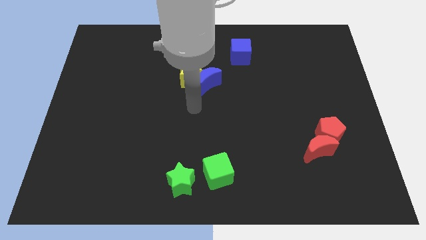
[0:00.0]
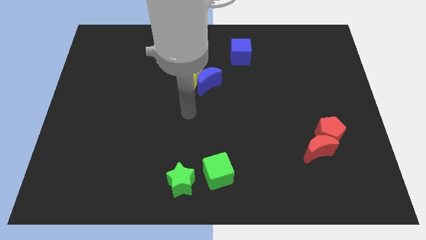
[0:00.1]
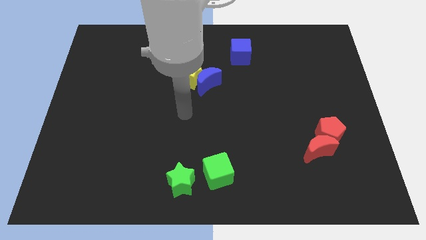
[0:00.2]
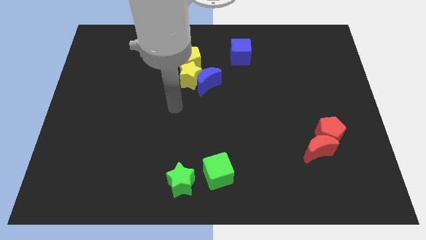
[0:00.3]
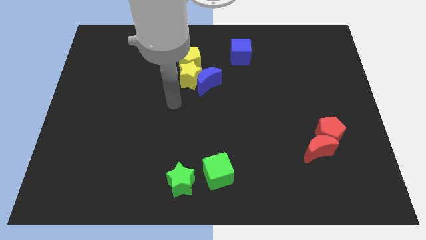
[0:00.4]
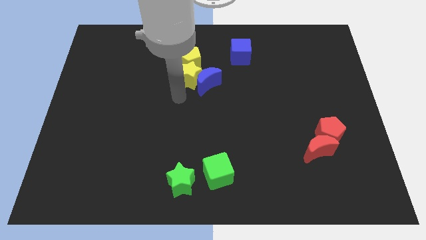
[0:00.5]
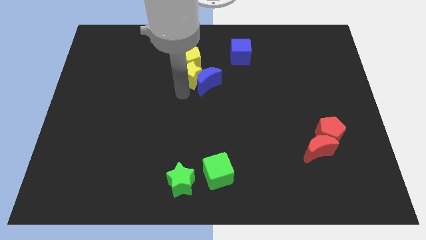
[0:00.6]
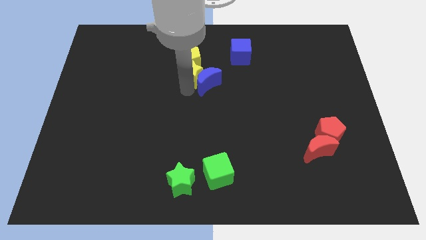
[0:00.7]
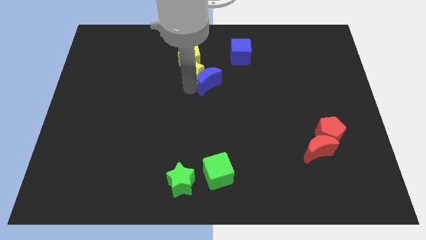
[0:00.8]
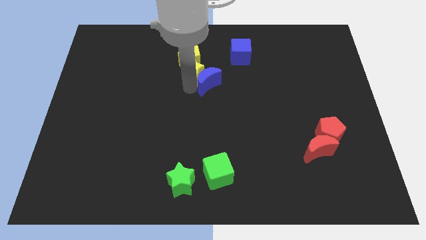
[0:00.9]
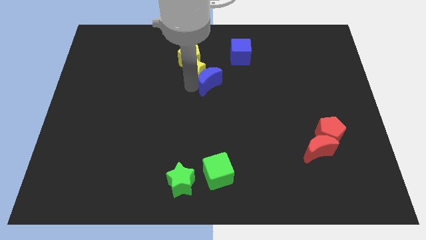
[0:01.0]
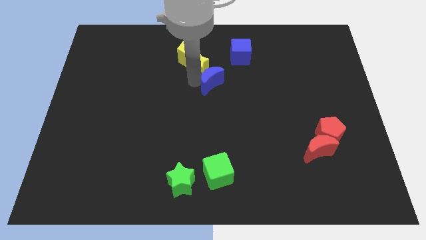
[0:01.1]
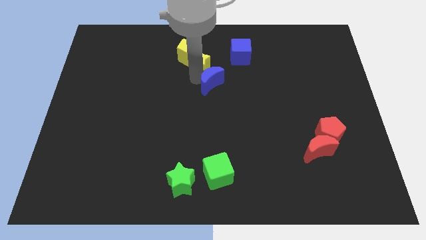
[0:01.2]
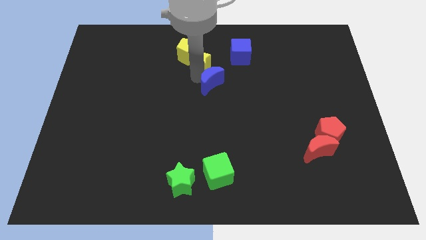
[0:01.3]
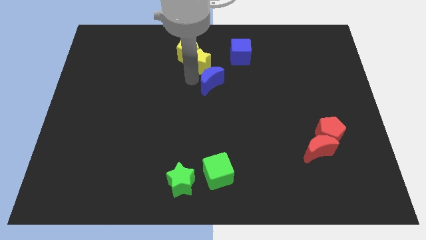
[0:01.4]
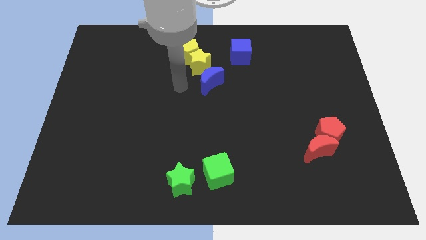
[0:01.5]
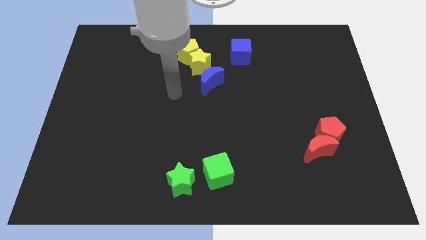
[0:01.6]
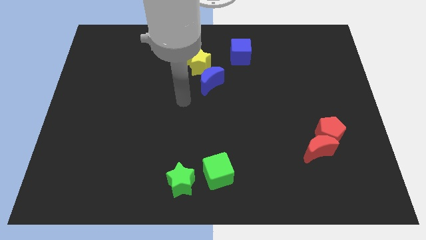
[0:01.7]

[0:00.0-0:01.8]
move the yellow pentagon with the yellow star

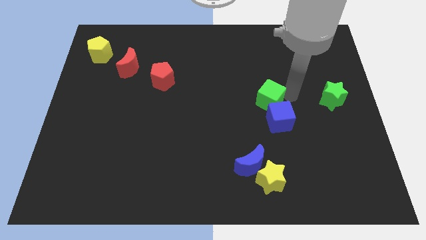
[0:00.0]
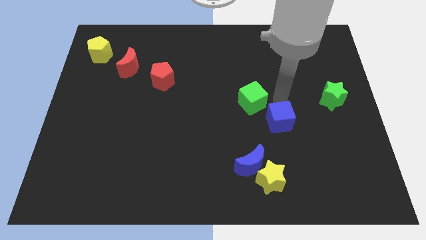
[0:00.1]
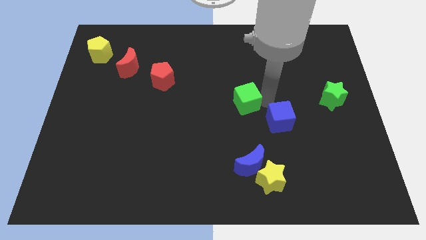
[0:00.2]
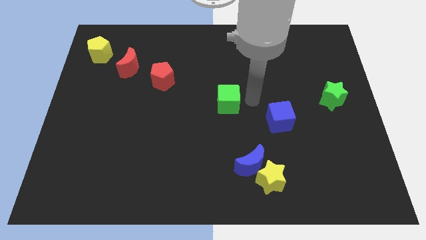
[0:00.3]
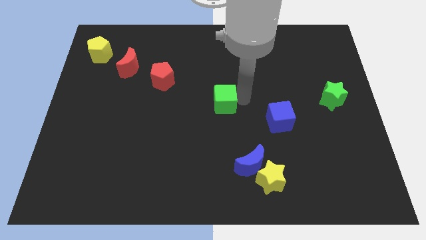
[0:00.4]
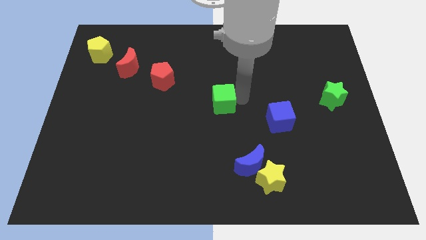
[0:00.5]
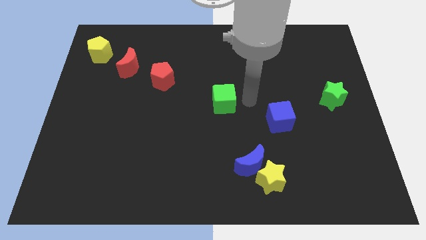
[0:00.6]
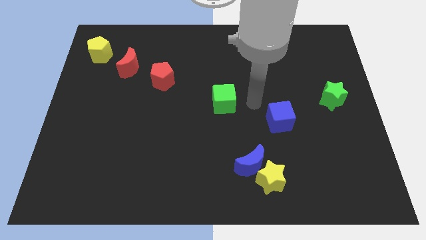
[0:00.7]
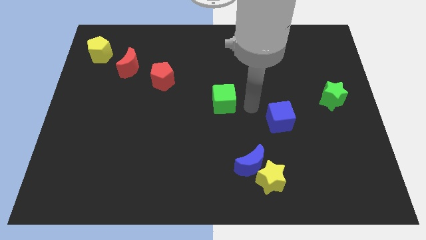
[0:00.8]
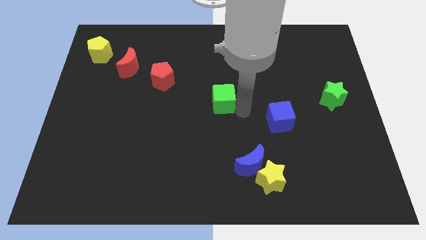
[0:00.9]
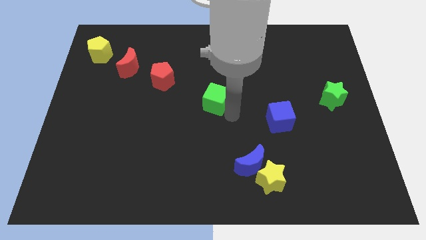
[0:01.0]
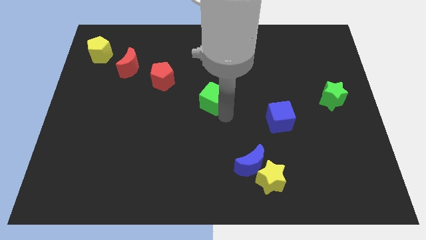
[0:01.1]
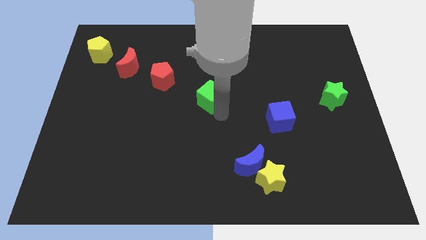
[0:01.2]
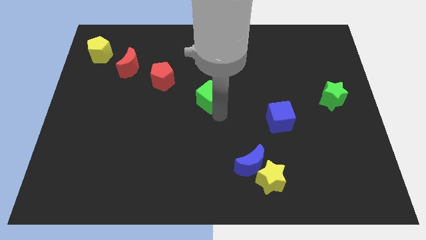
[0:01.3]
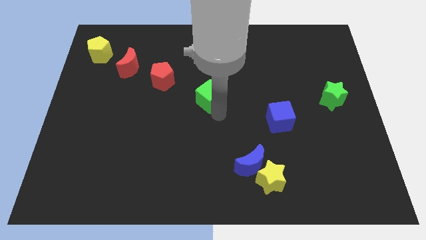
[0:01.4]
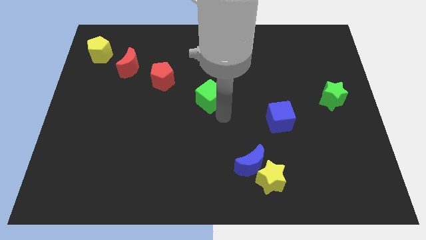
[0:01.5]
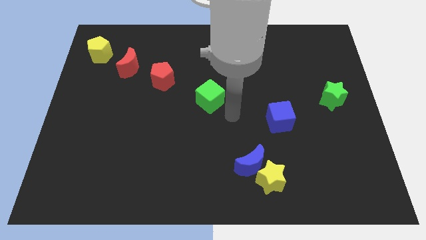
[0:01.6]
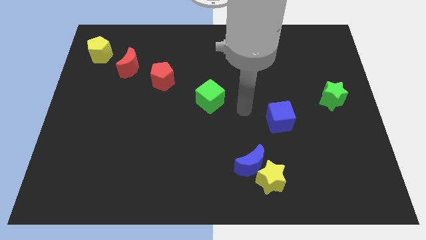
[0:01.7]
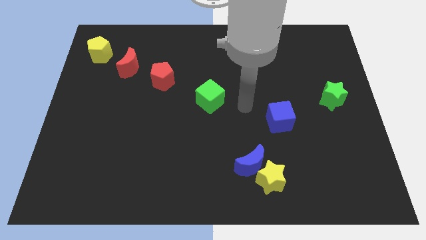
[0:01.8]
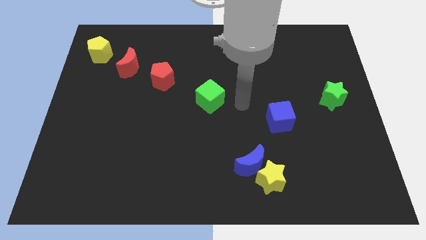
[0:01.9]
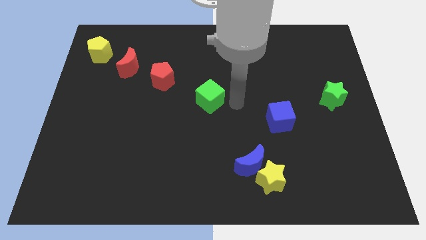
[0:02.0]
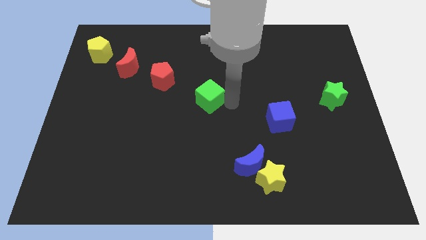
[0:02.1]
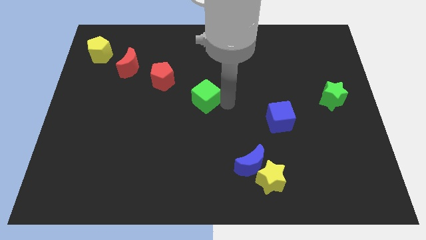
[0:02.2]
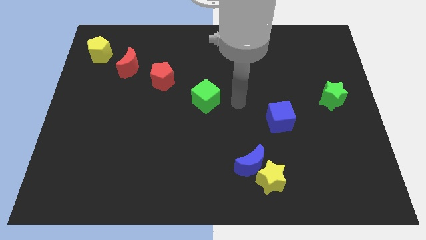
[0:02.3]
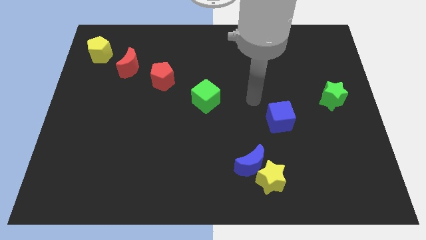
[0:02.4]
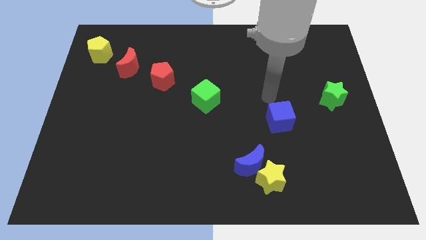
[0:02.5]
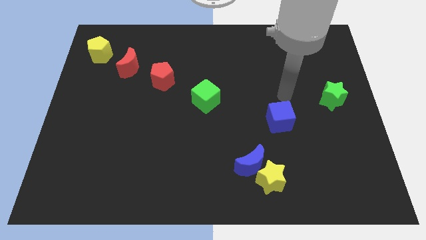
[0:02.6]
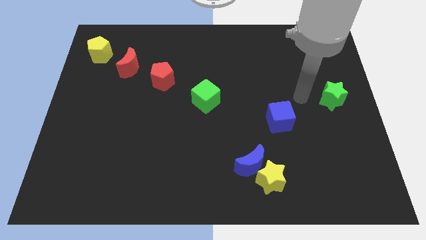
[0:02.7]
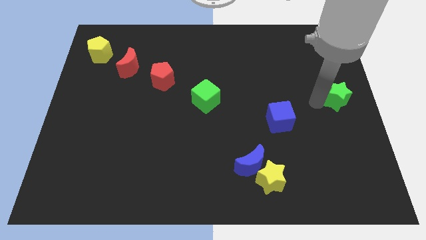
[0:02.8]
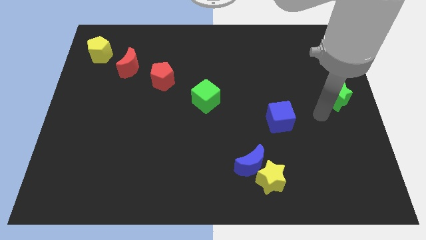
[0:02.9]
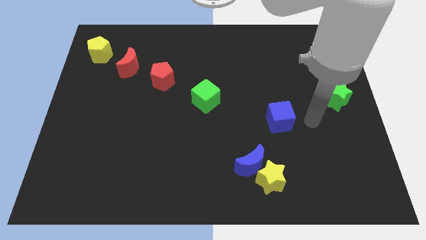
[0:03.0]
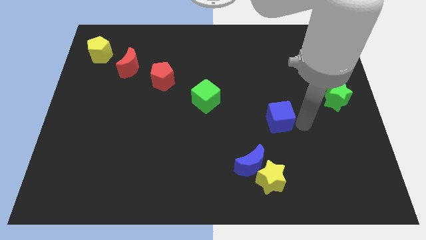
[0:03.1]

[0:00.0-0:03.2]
move the green cube diagonal to the red pentagon

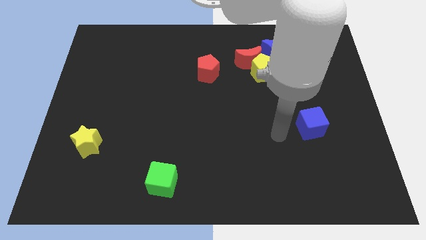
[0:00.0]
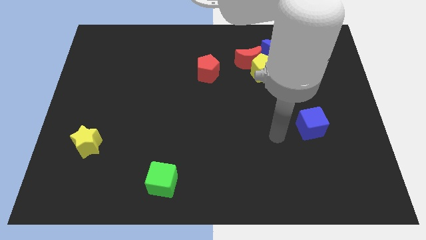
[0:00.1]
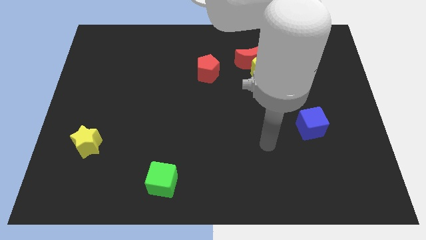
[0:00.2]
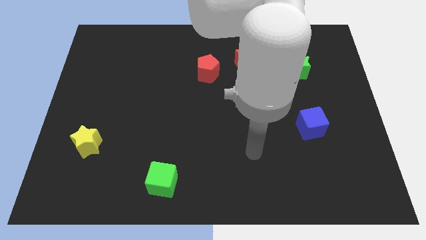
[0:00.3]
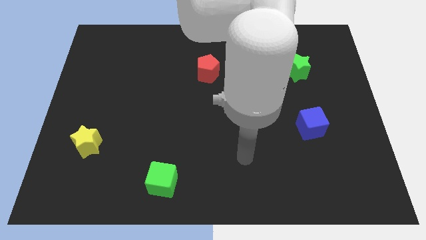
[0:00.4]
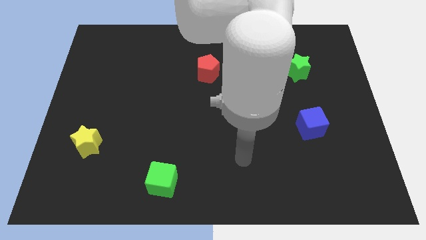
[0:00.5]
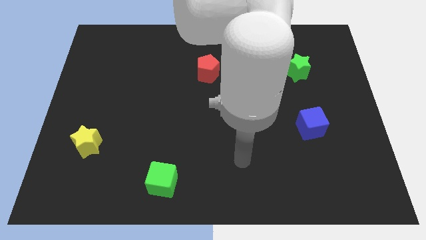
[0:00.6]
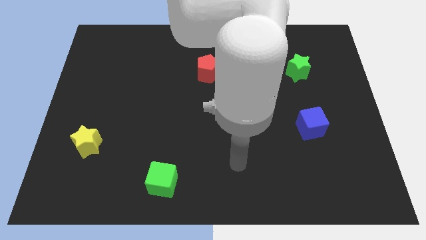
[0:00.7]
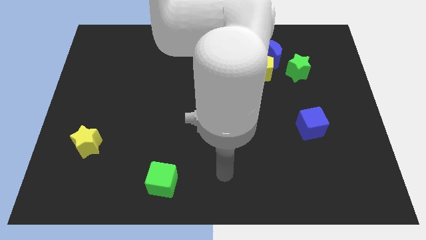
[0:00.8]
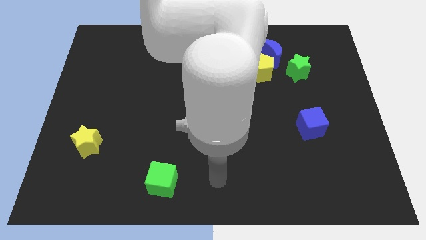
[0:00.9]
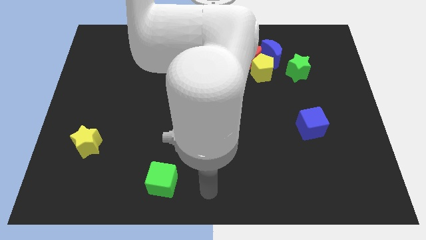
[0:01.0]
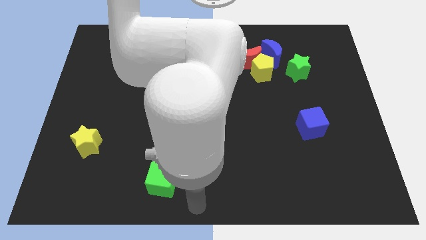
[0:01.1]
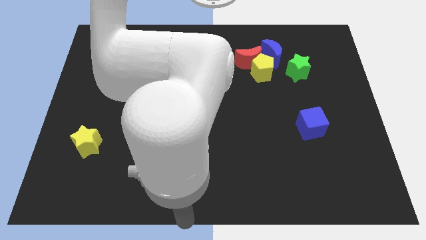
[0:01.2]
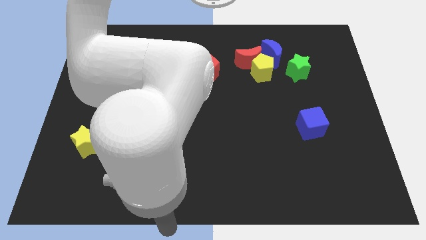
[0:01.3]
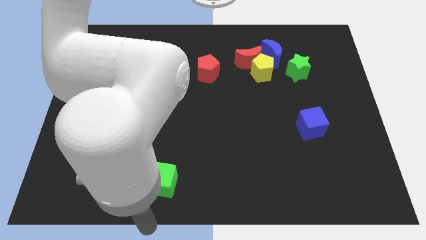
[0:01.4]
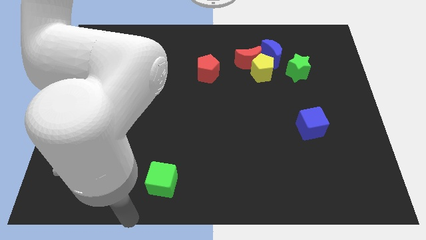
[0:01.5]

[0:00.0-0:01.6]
move your arm below the green cube

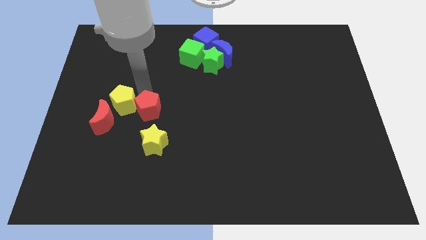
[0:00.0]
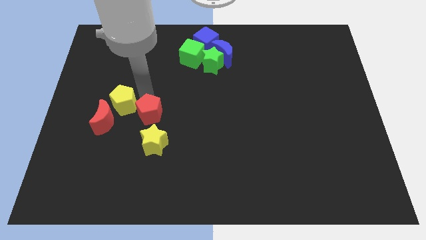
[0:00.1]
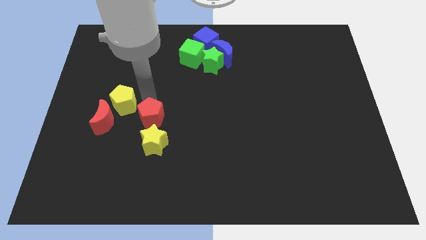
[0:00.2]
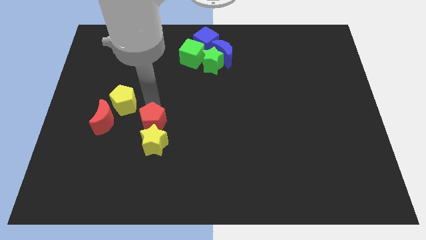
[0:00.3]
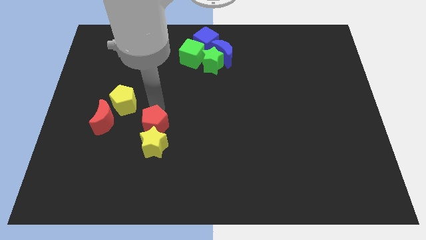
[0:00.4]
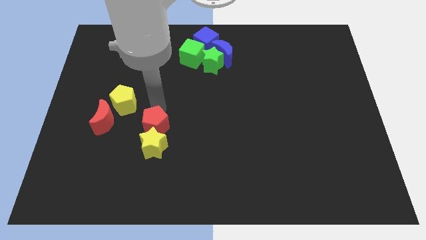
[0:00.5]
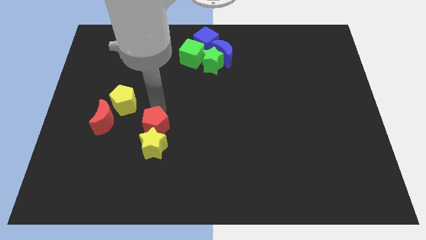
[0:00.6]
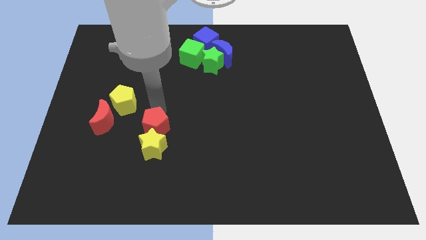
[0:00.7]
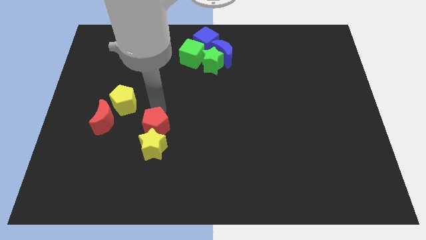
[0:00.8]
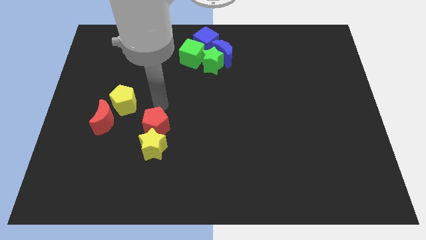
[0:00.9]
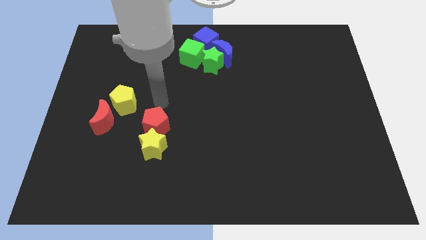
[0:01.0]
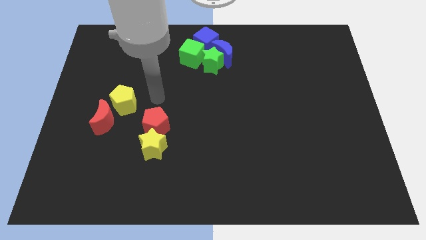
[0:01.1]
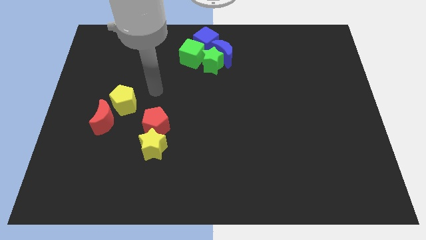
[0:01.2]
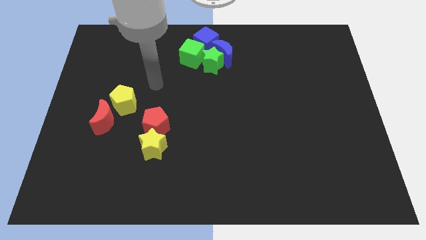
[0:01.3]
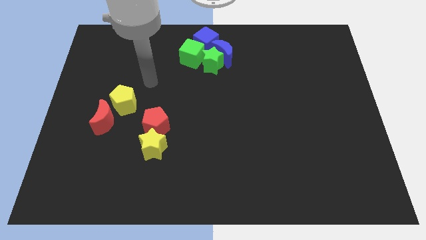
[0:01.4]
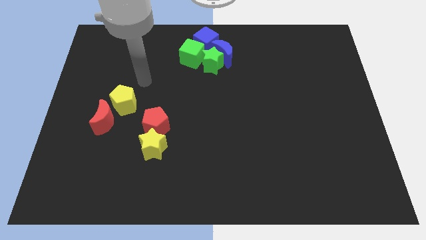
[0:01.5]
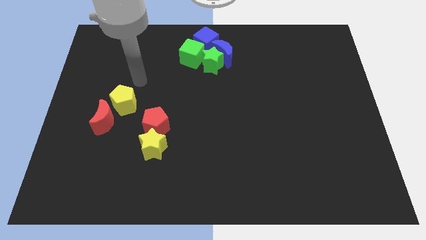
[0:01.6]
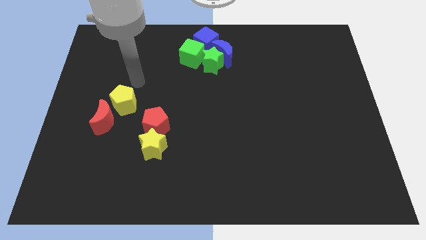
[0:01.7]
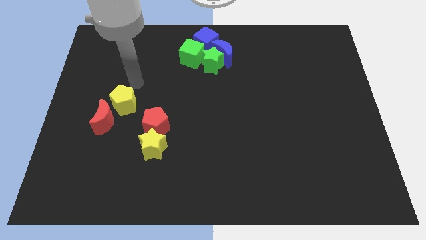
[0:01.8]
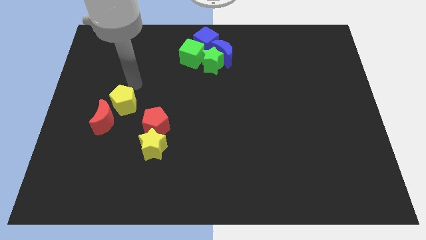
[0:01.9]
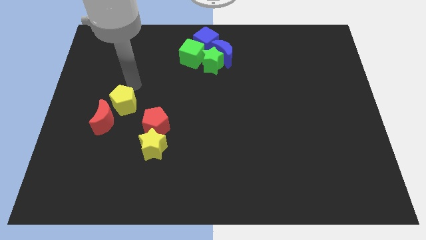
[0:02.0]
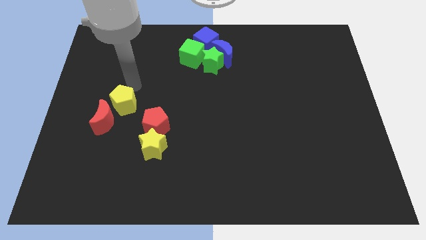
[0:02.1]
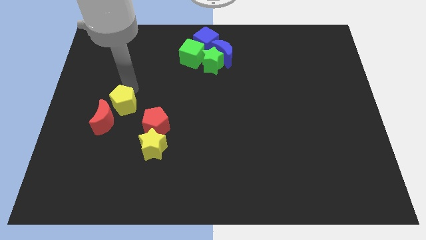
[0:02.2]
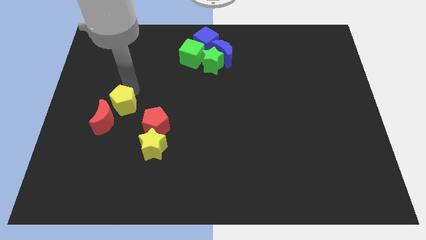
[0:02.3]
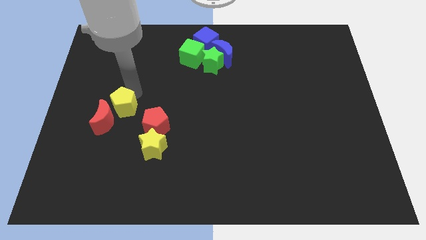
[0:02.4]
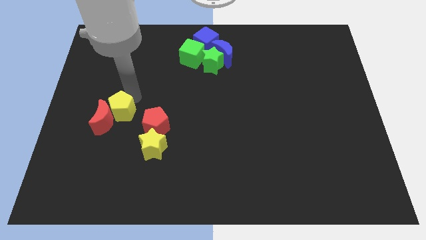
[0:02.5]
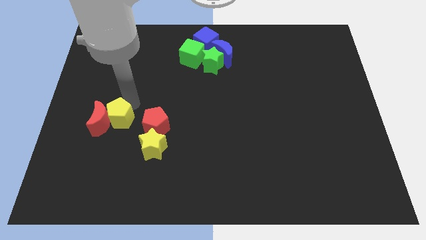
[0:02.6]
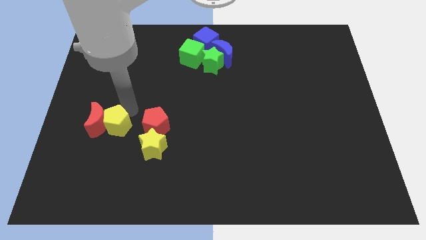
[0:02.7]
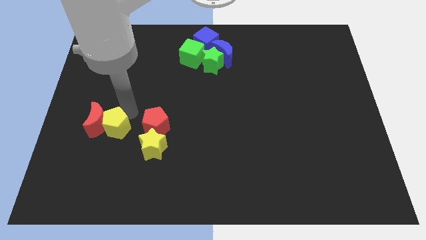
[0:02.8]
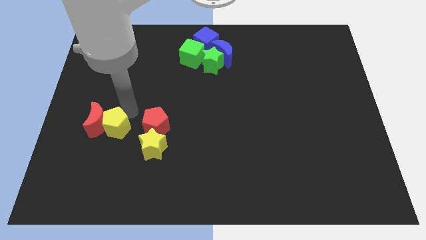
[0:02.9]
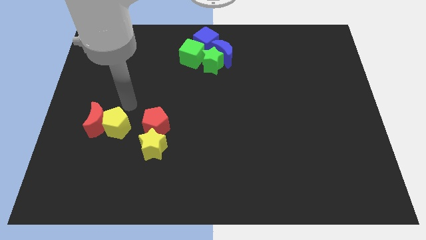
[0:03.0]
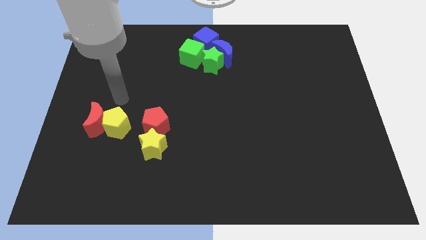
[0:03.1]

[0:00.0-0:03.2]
separate the yellow pentagon and red pentagon
